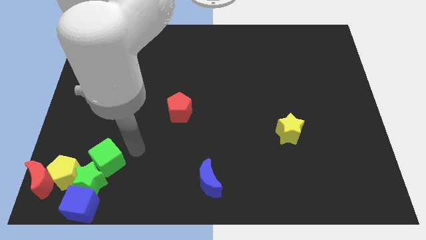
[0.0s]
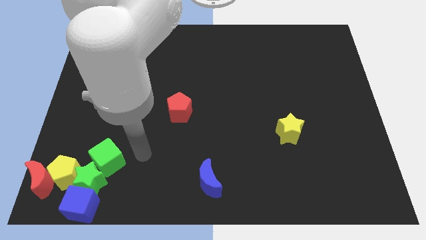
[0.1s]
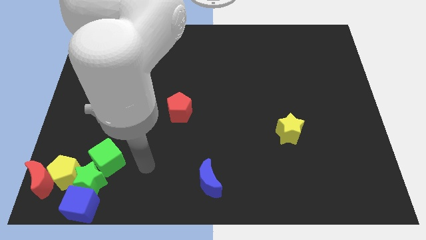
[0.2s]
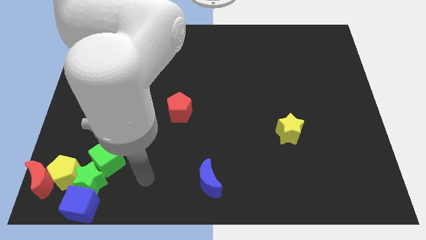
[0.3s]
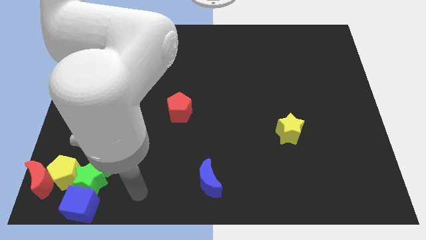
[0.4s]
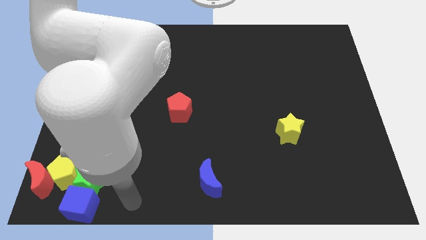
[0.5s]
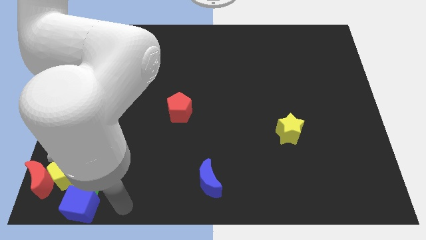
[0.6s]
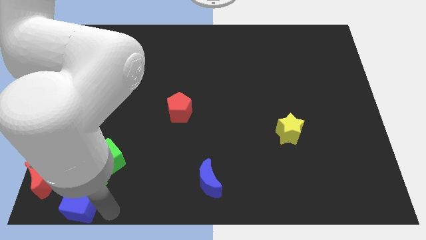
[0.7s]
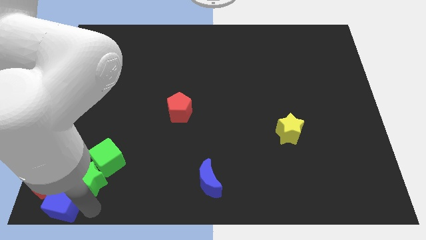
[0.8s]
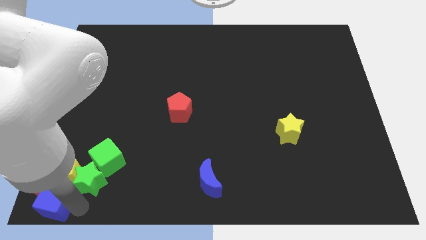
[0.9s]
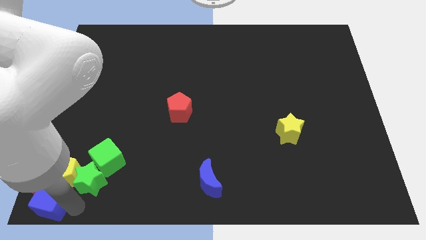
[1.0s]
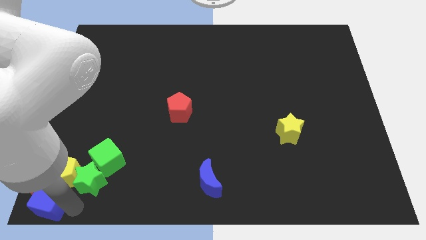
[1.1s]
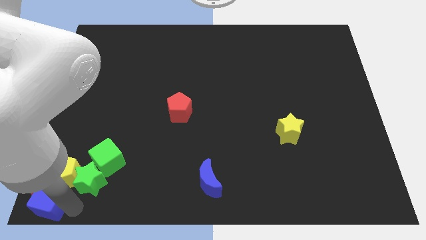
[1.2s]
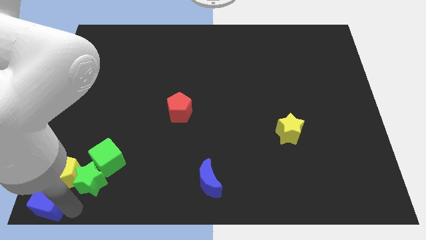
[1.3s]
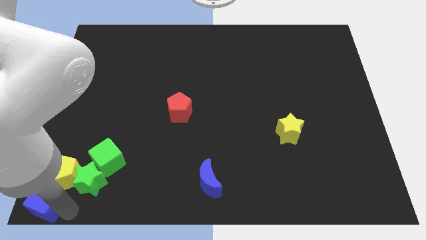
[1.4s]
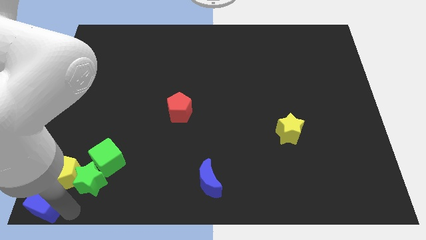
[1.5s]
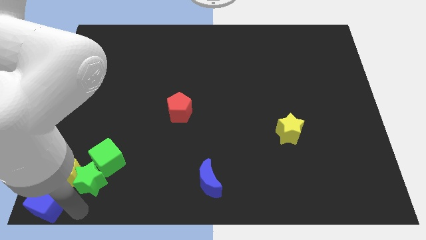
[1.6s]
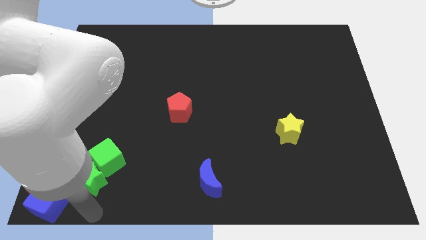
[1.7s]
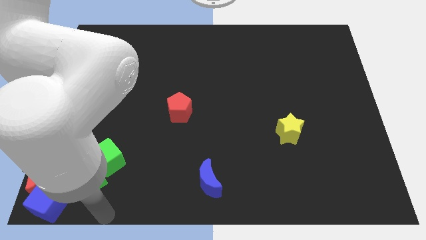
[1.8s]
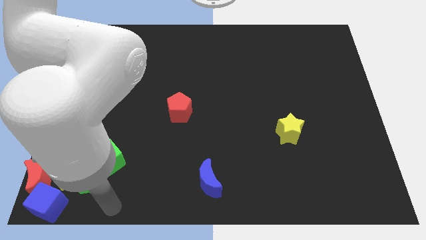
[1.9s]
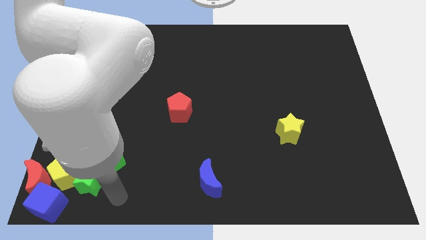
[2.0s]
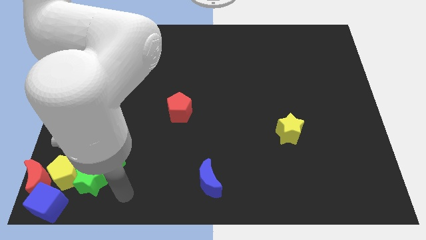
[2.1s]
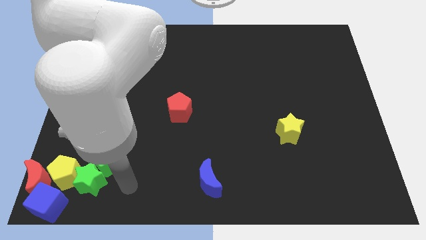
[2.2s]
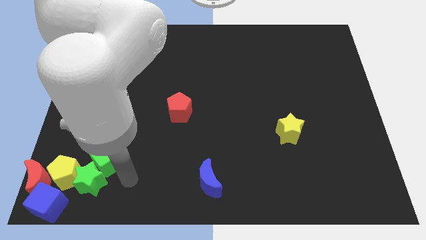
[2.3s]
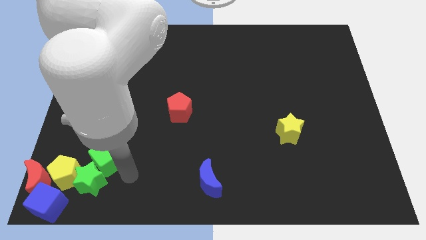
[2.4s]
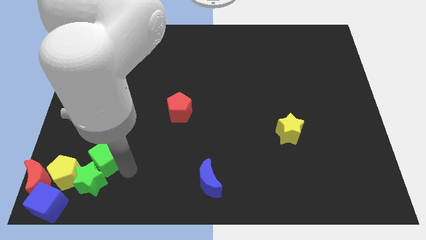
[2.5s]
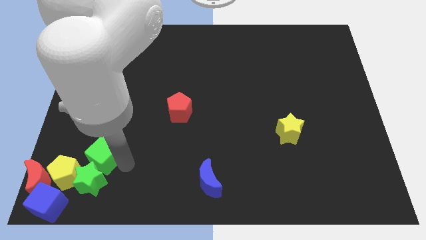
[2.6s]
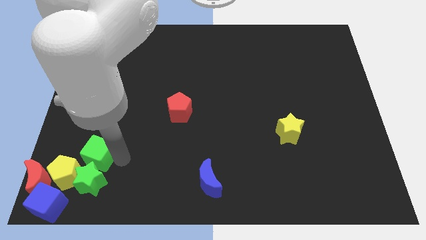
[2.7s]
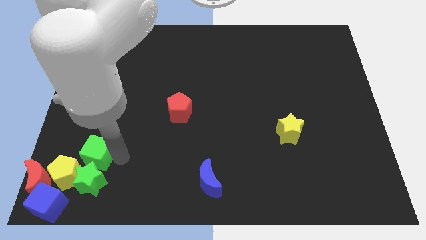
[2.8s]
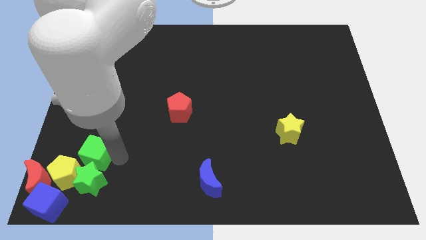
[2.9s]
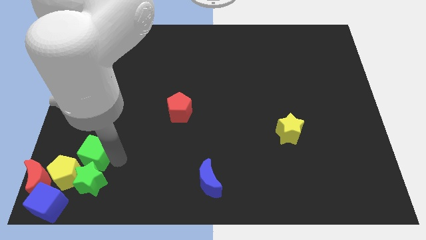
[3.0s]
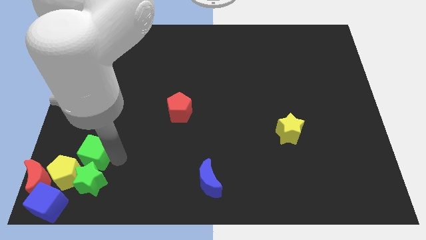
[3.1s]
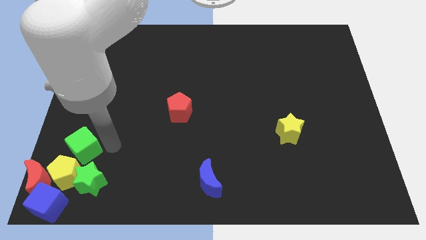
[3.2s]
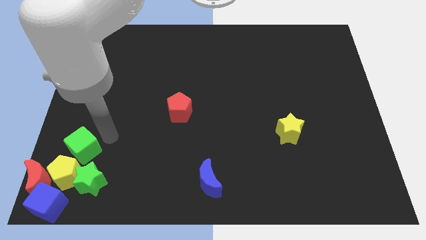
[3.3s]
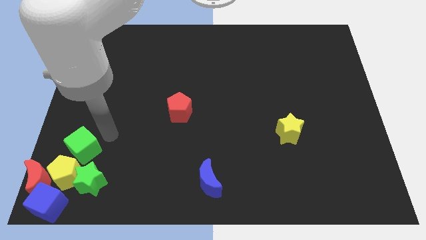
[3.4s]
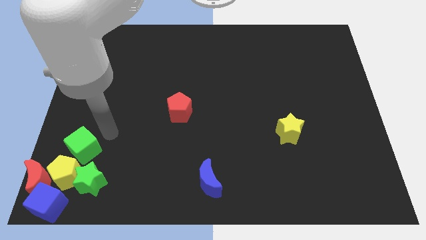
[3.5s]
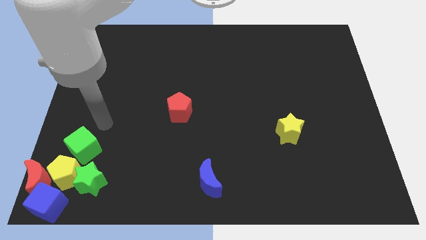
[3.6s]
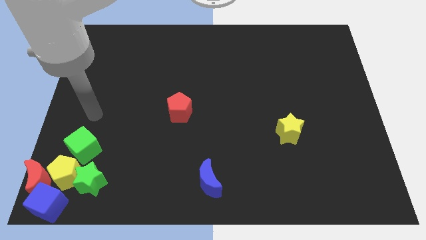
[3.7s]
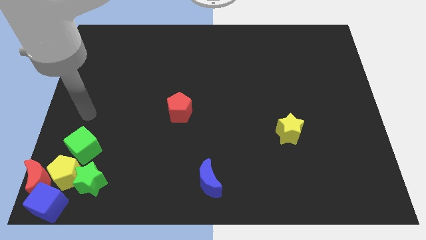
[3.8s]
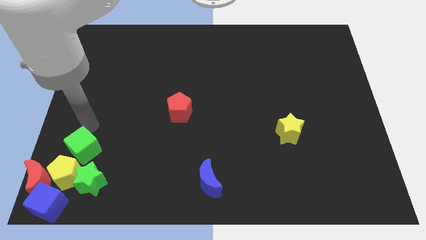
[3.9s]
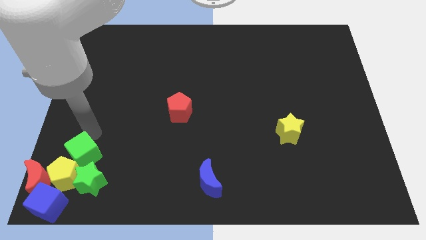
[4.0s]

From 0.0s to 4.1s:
move the blue cube bottom to the yellow pentagon

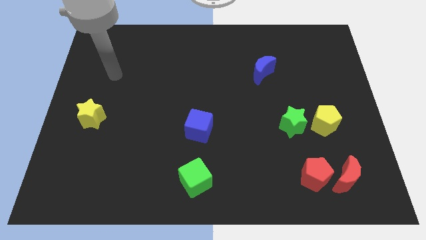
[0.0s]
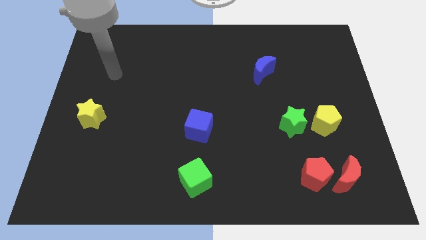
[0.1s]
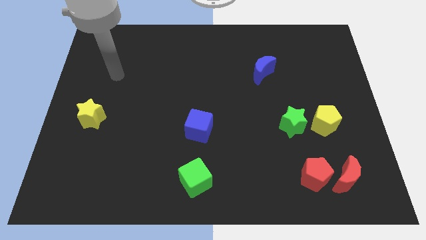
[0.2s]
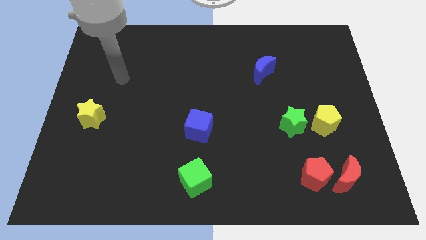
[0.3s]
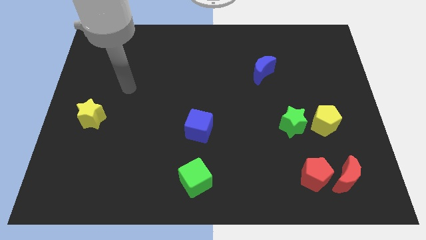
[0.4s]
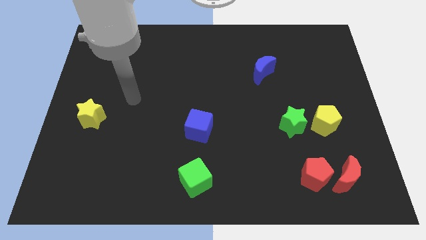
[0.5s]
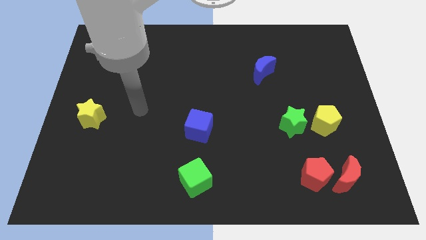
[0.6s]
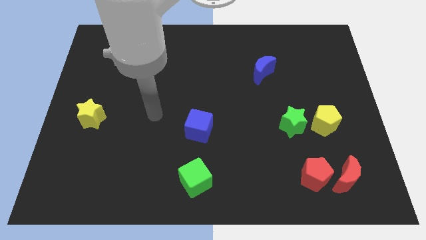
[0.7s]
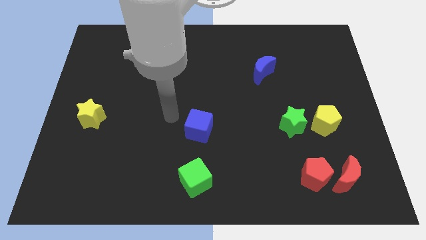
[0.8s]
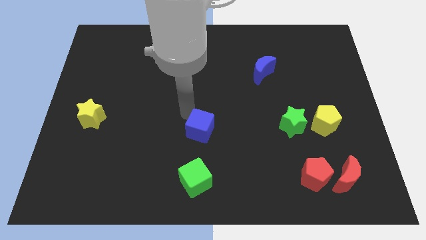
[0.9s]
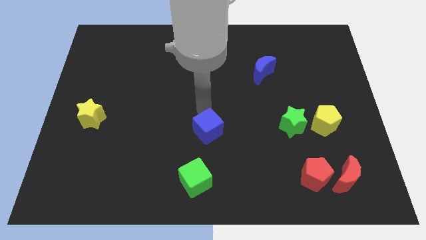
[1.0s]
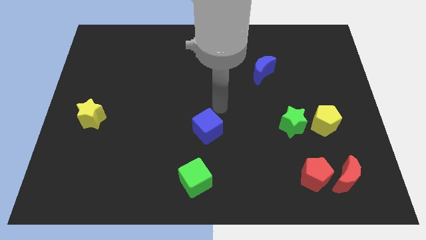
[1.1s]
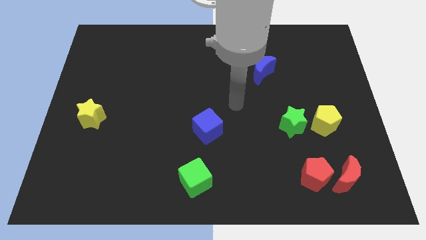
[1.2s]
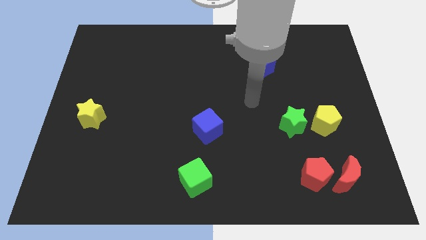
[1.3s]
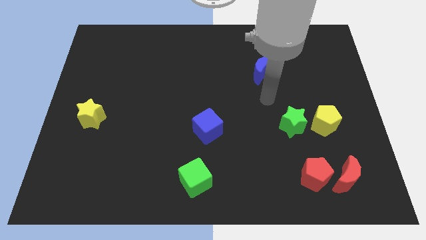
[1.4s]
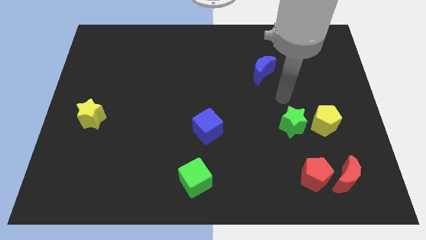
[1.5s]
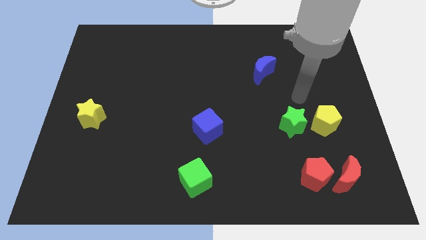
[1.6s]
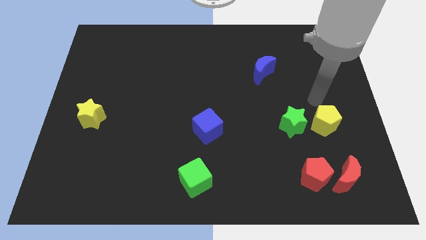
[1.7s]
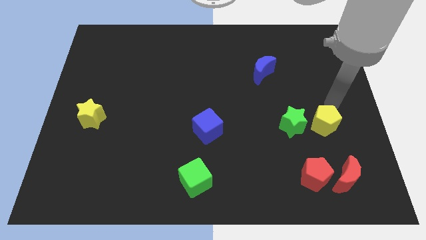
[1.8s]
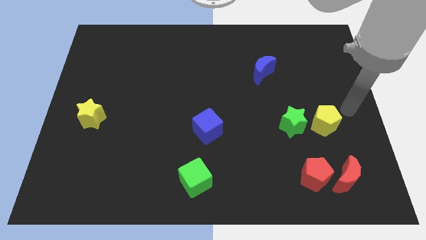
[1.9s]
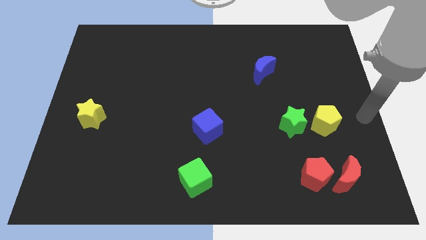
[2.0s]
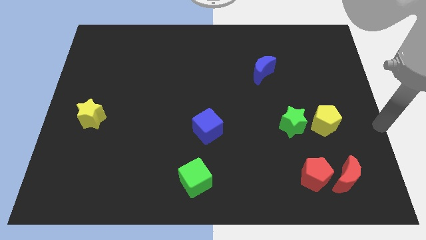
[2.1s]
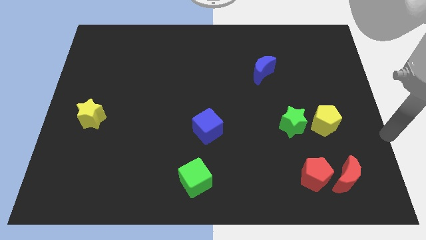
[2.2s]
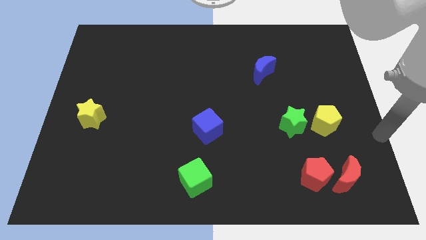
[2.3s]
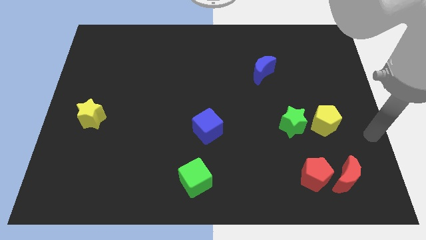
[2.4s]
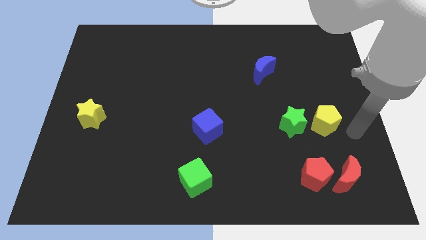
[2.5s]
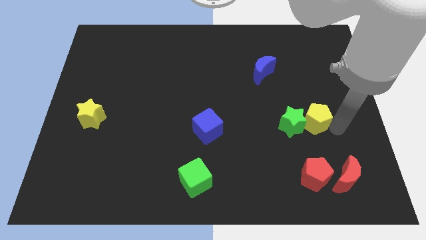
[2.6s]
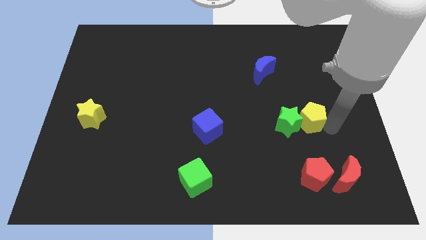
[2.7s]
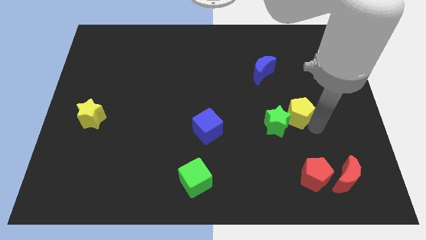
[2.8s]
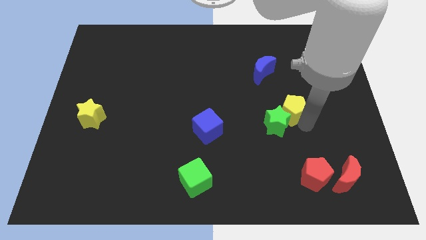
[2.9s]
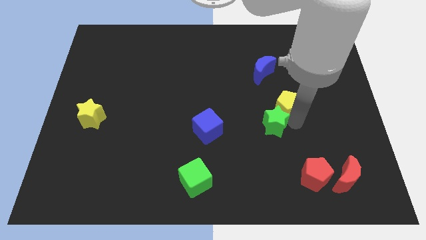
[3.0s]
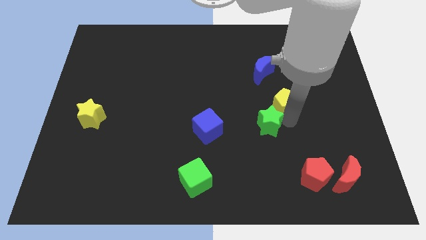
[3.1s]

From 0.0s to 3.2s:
put the yellow pentagon into the green star

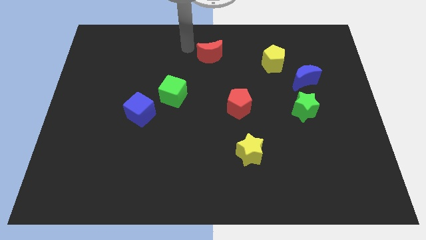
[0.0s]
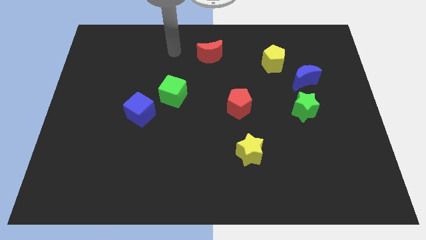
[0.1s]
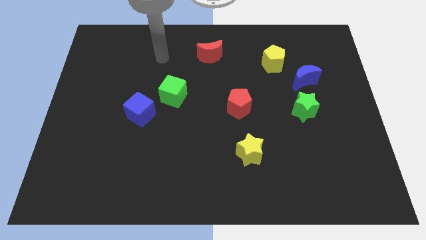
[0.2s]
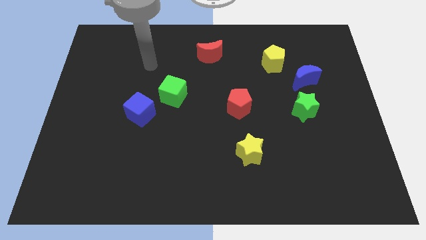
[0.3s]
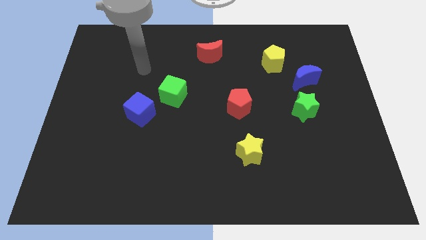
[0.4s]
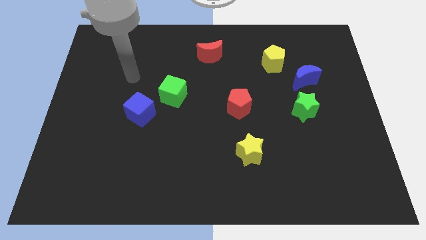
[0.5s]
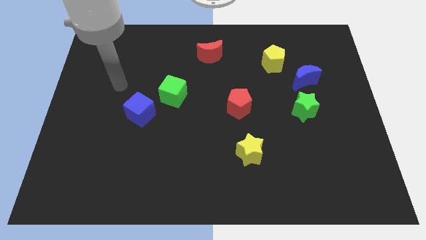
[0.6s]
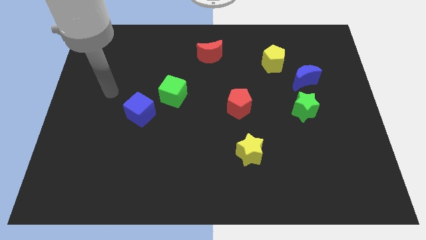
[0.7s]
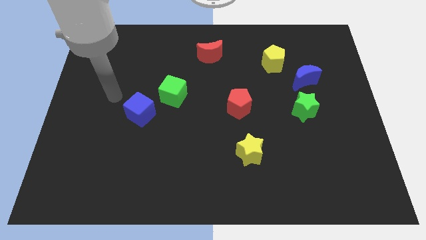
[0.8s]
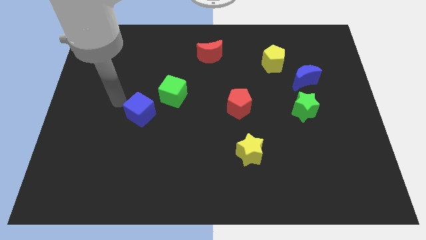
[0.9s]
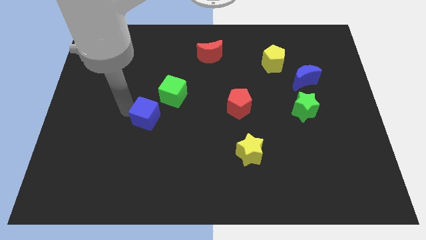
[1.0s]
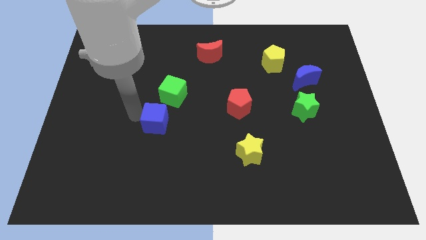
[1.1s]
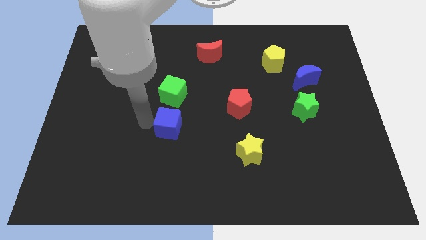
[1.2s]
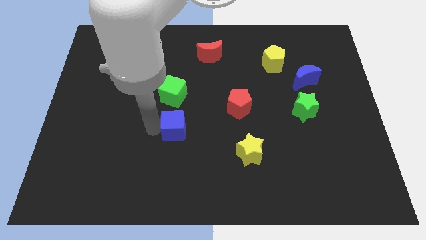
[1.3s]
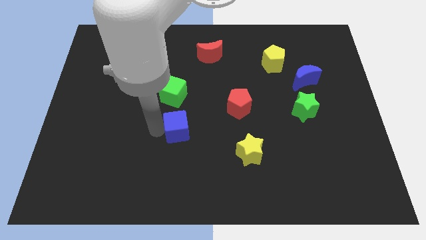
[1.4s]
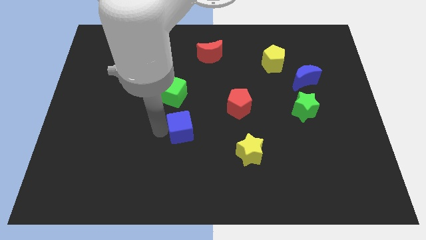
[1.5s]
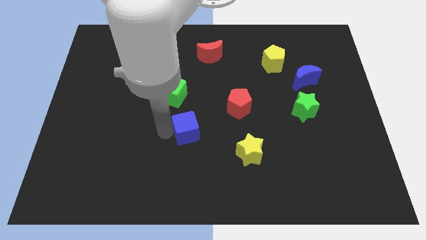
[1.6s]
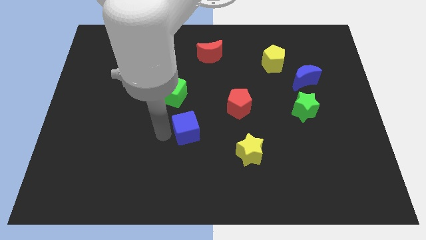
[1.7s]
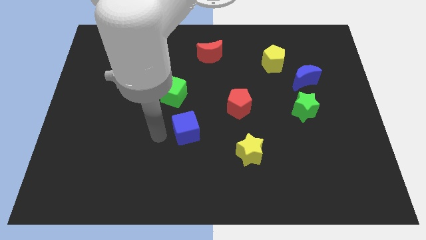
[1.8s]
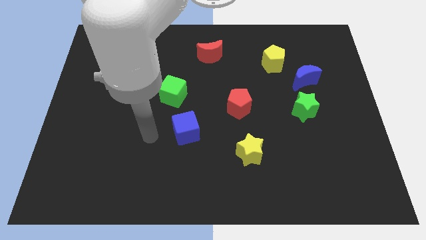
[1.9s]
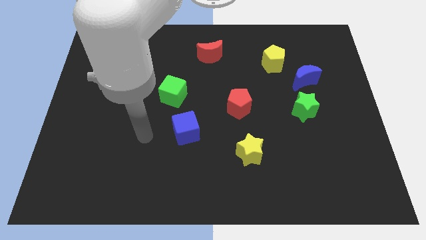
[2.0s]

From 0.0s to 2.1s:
move the blue cube to the bottom right of the green cube
